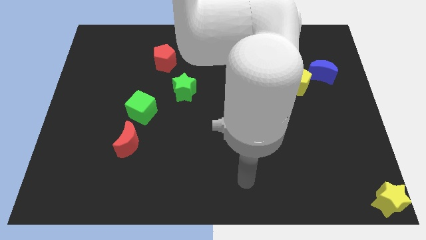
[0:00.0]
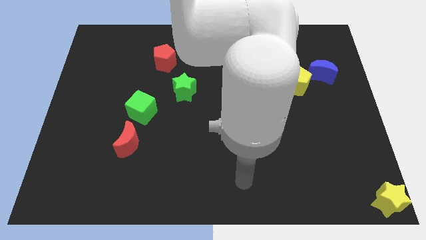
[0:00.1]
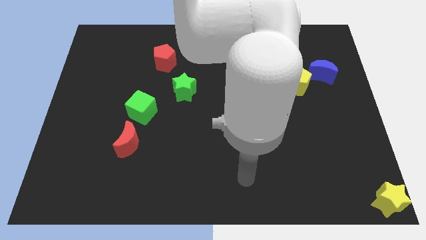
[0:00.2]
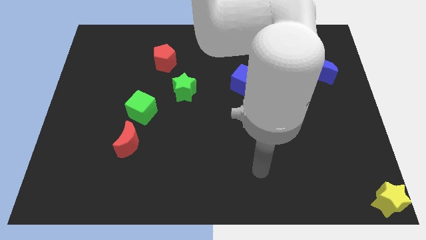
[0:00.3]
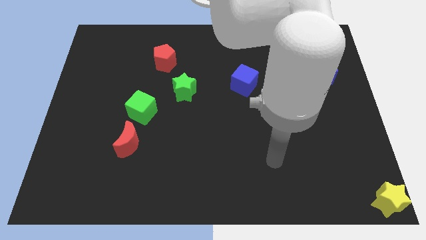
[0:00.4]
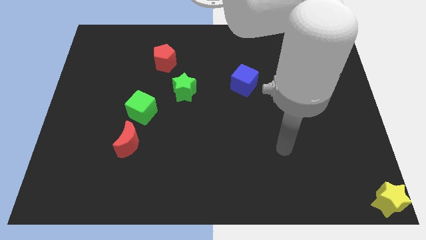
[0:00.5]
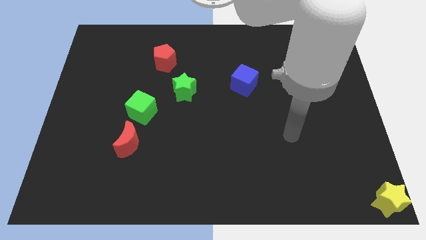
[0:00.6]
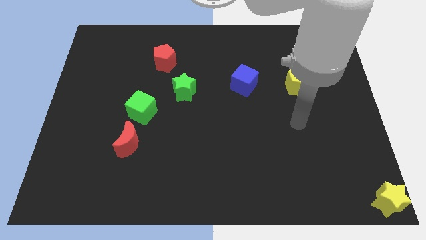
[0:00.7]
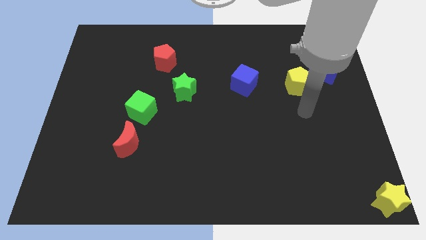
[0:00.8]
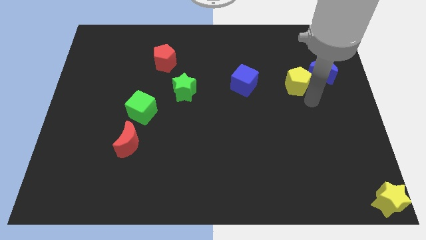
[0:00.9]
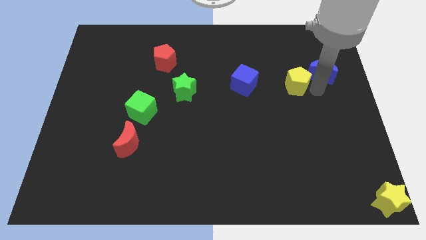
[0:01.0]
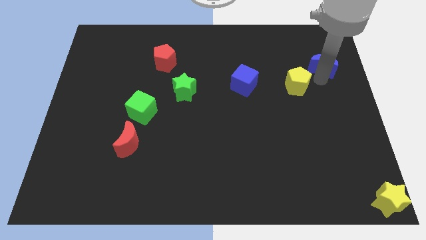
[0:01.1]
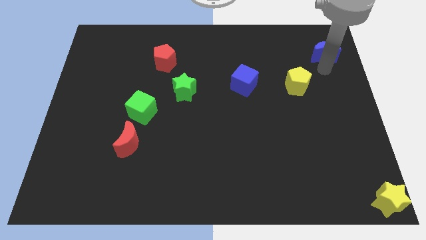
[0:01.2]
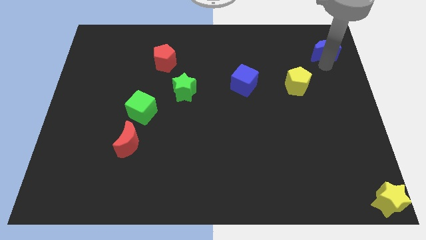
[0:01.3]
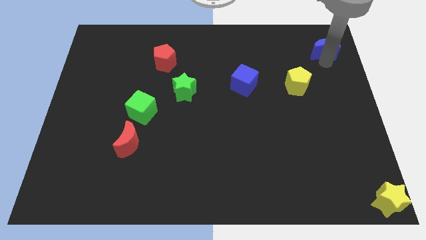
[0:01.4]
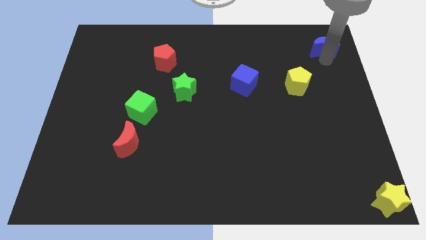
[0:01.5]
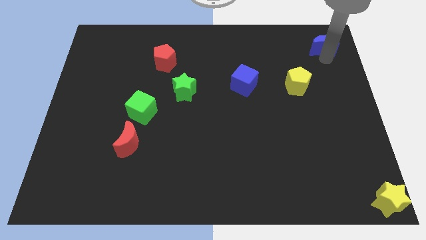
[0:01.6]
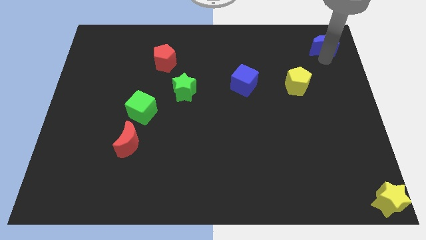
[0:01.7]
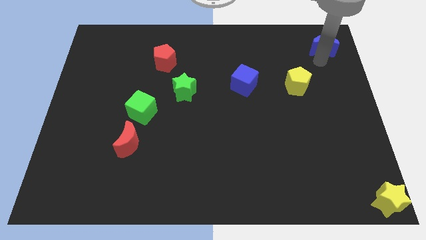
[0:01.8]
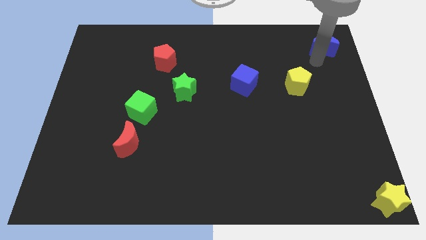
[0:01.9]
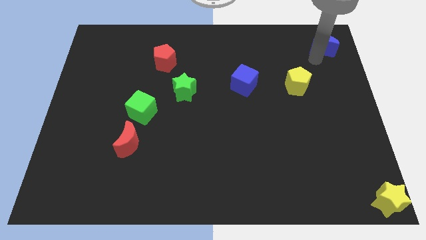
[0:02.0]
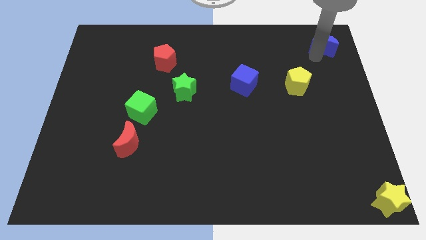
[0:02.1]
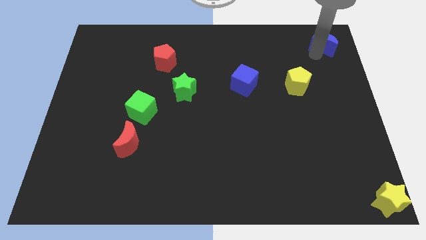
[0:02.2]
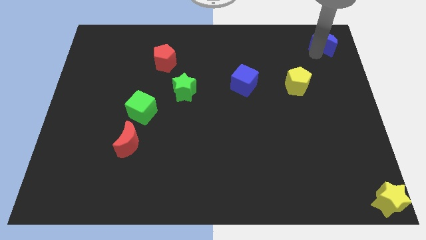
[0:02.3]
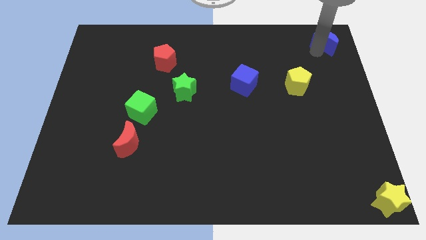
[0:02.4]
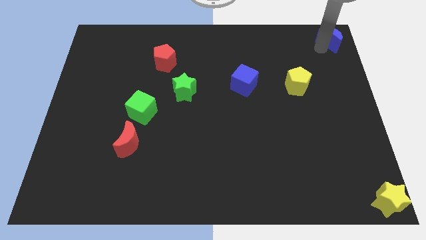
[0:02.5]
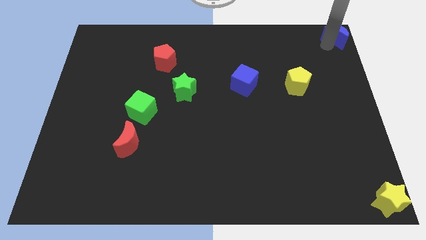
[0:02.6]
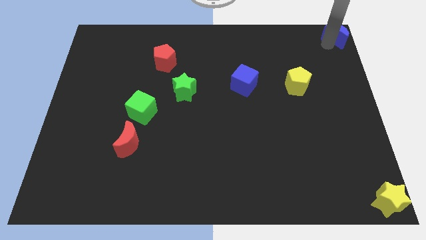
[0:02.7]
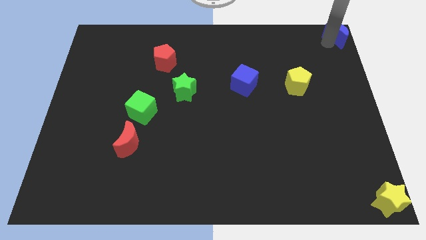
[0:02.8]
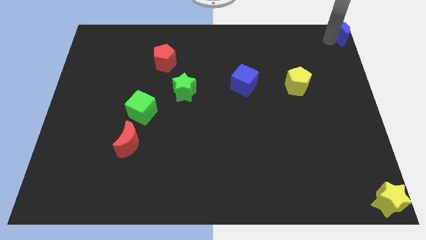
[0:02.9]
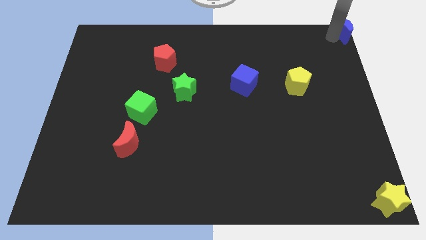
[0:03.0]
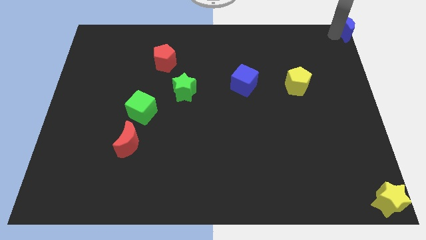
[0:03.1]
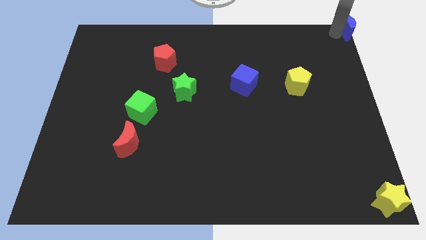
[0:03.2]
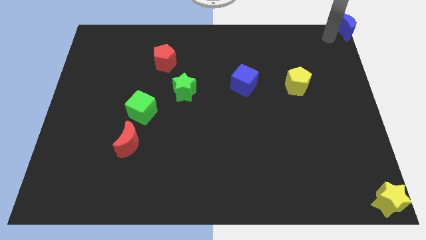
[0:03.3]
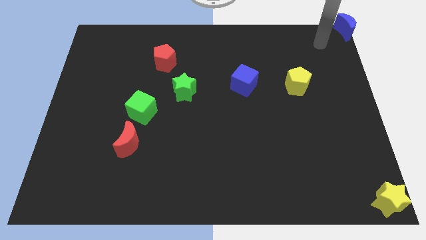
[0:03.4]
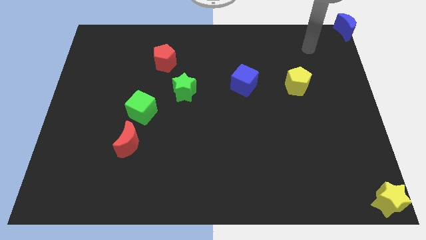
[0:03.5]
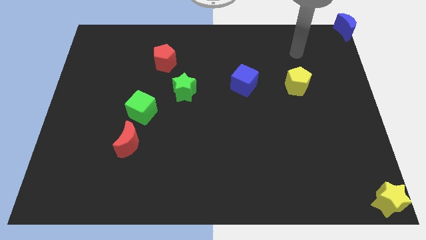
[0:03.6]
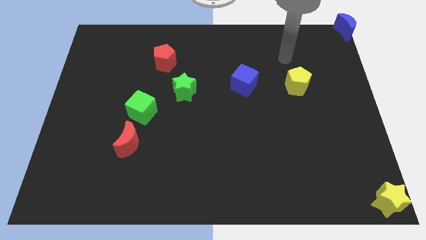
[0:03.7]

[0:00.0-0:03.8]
move the blue crescent to the top right corner of the board

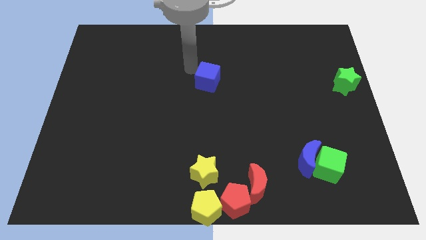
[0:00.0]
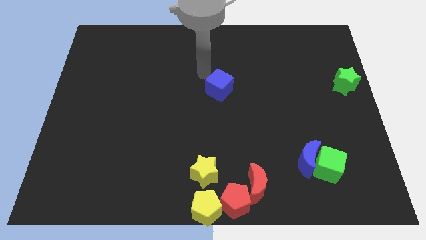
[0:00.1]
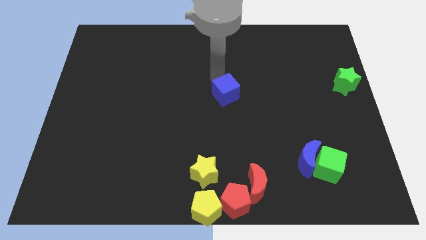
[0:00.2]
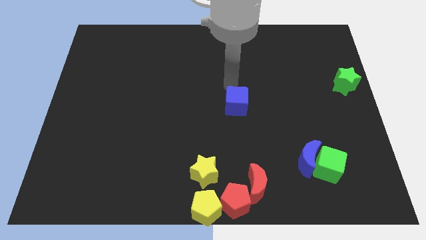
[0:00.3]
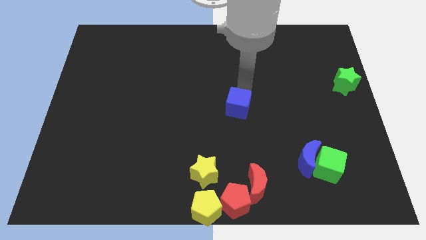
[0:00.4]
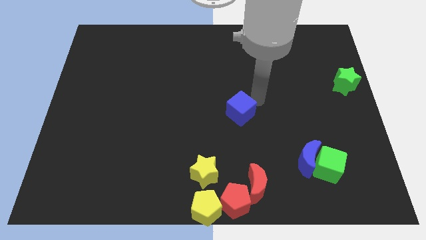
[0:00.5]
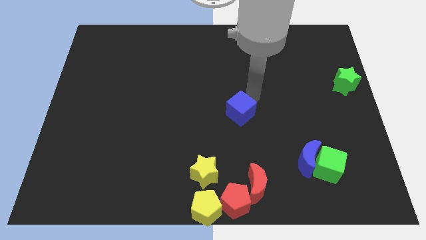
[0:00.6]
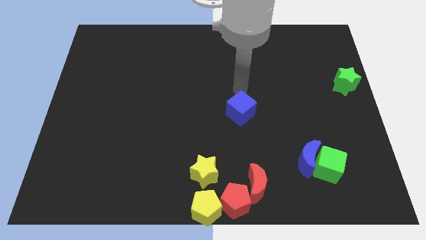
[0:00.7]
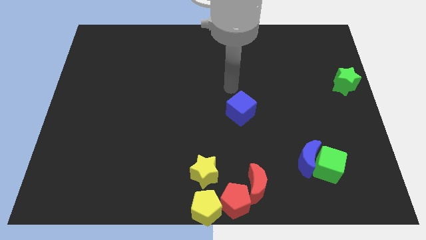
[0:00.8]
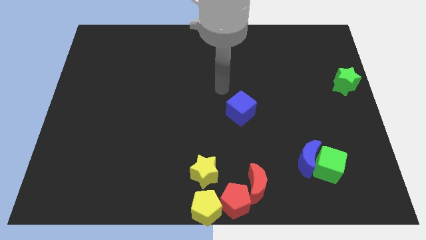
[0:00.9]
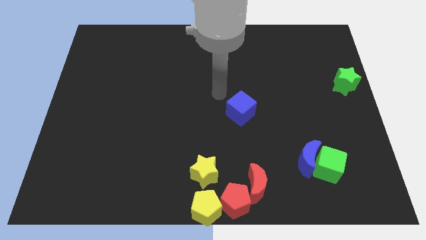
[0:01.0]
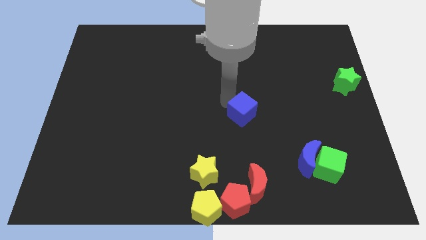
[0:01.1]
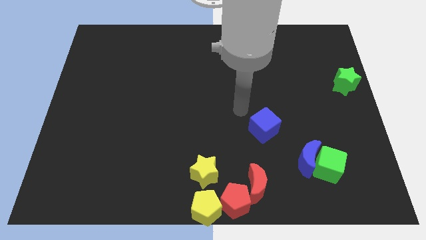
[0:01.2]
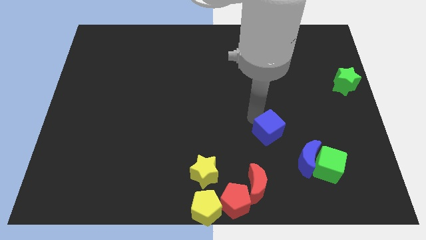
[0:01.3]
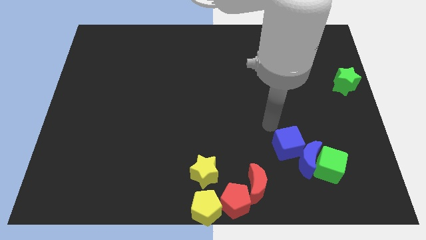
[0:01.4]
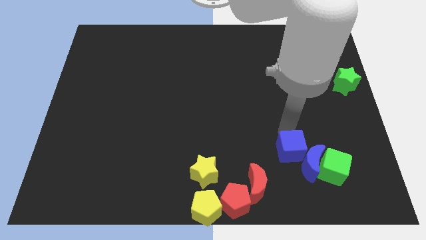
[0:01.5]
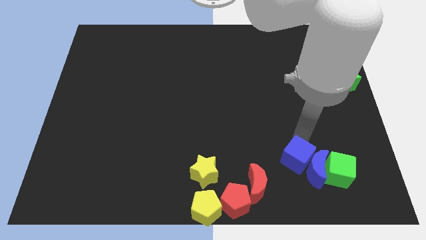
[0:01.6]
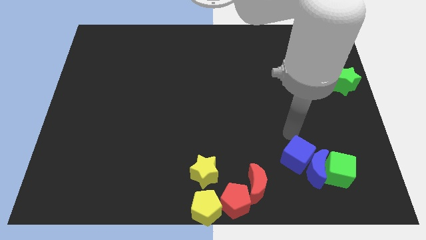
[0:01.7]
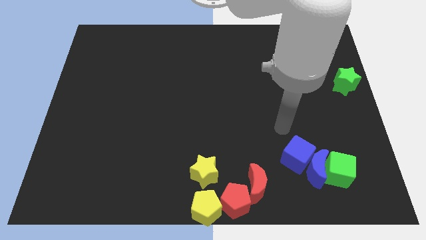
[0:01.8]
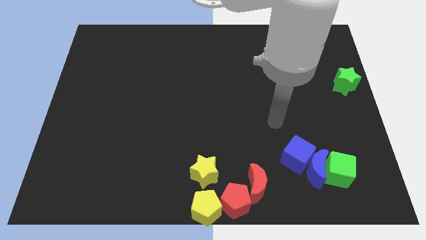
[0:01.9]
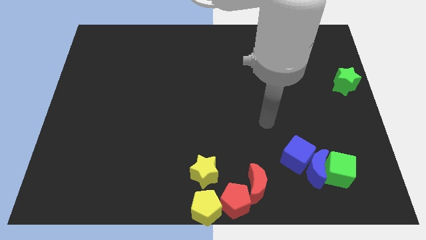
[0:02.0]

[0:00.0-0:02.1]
slide the blue cube into the blue moon

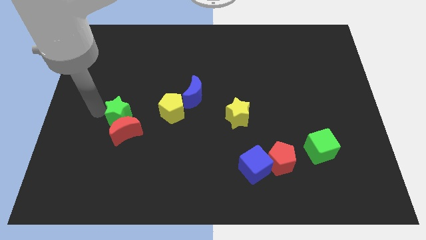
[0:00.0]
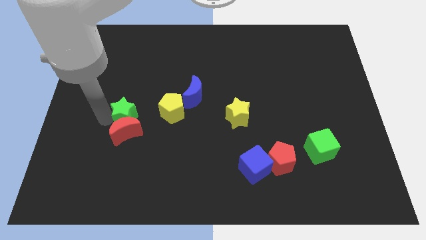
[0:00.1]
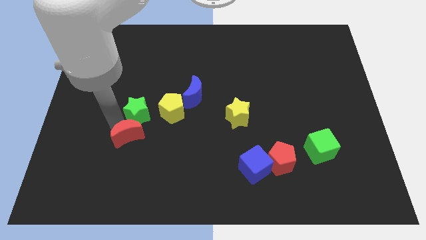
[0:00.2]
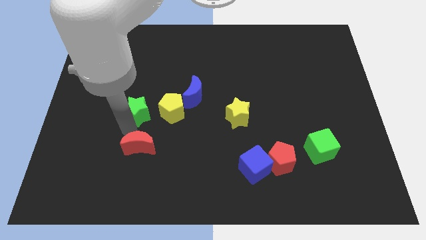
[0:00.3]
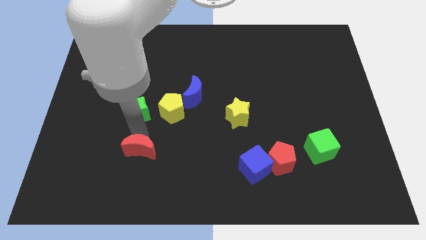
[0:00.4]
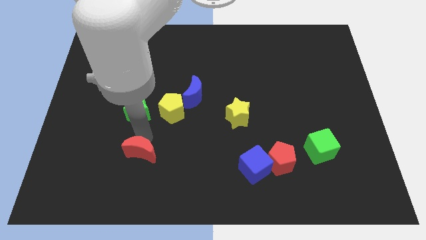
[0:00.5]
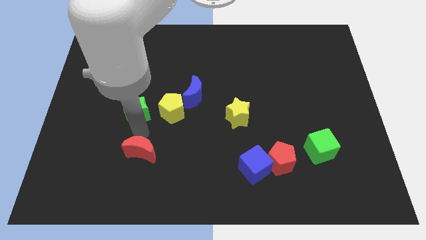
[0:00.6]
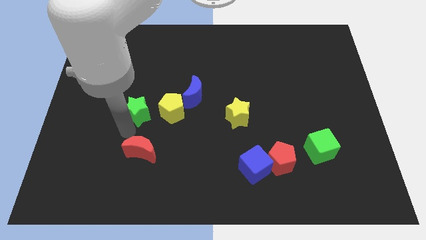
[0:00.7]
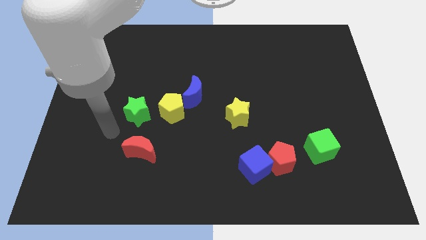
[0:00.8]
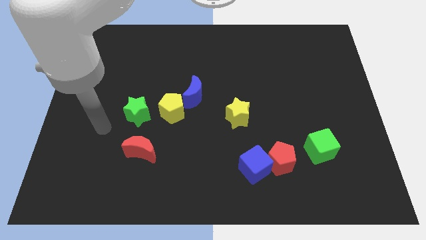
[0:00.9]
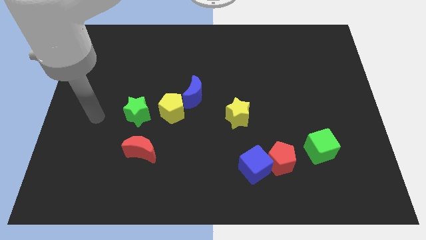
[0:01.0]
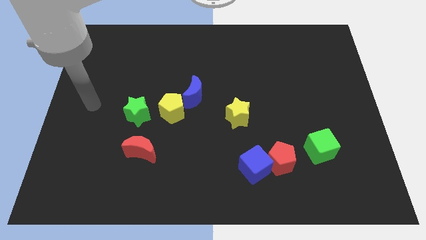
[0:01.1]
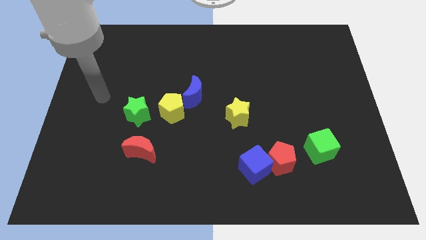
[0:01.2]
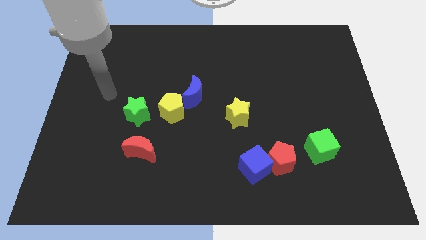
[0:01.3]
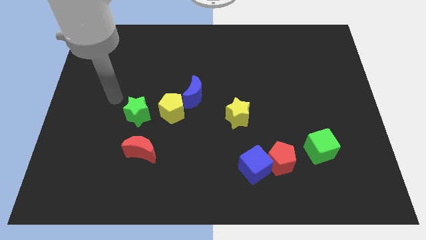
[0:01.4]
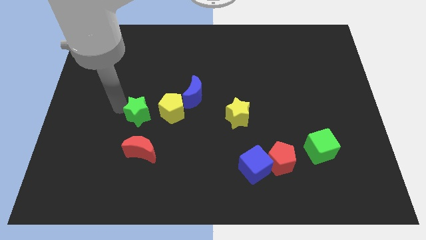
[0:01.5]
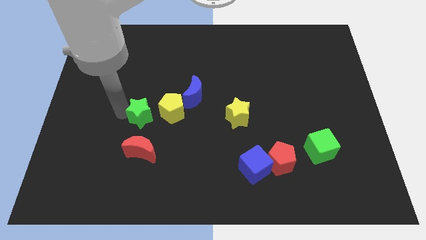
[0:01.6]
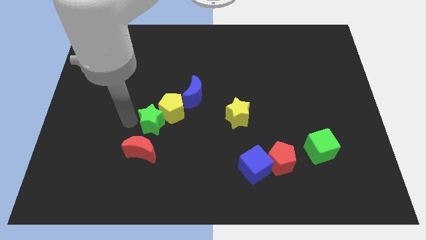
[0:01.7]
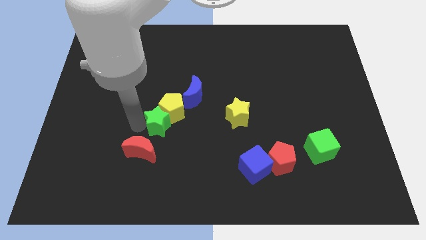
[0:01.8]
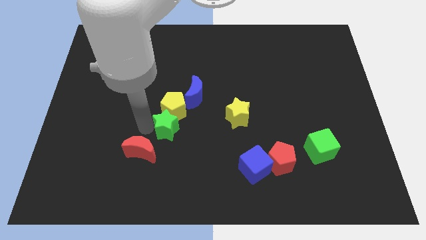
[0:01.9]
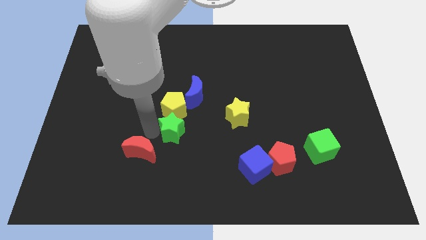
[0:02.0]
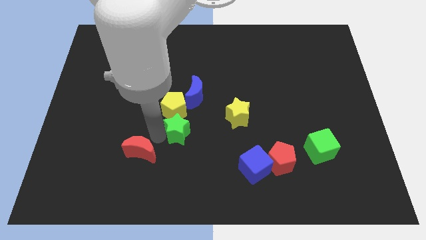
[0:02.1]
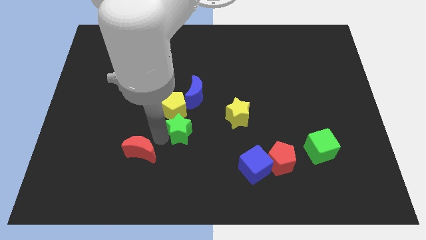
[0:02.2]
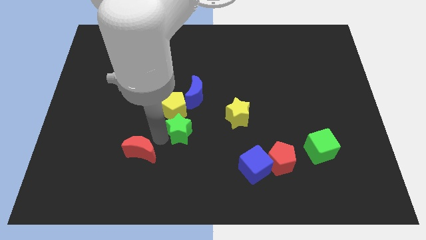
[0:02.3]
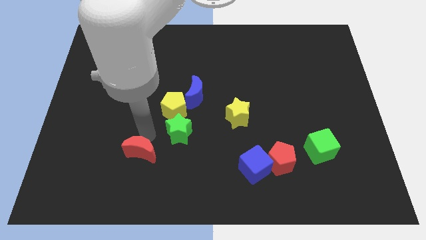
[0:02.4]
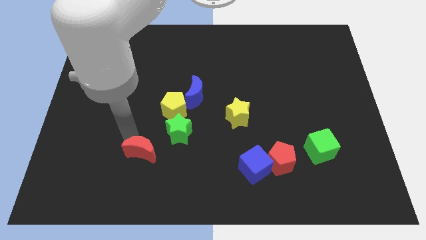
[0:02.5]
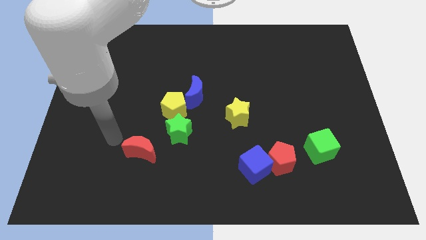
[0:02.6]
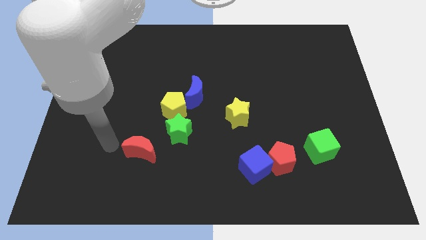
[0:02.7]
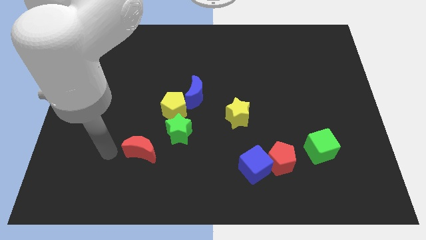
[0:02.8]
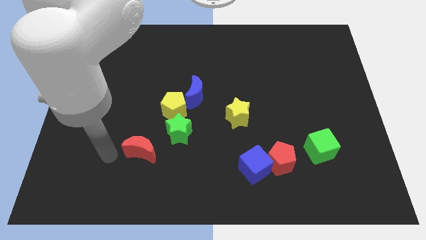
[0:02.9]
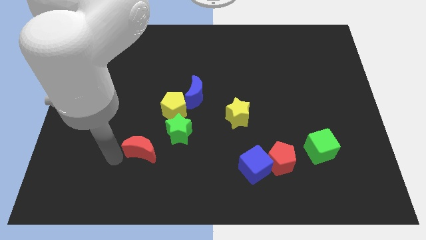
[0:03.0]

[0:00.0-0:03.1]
separate the green star and red moon
